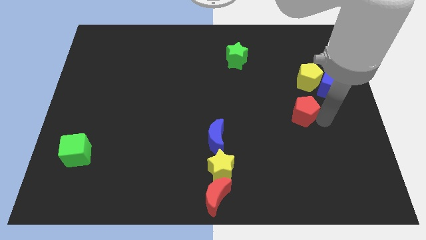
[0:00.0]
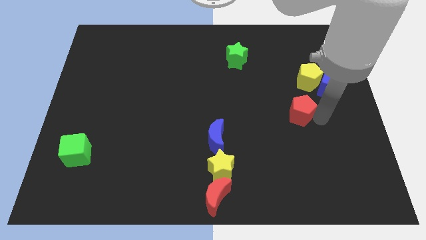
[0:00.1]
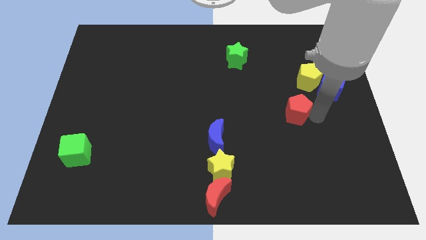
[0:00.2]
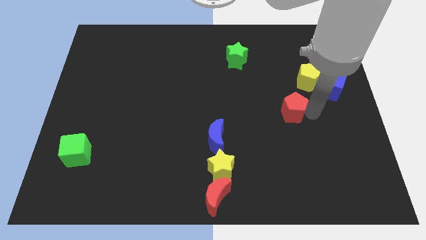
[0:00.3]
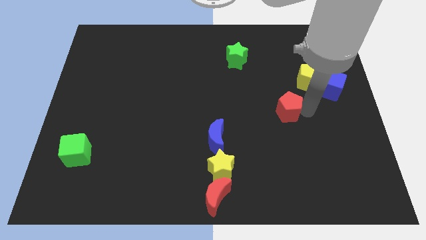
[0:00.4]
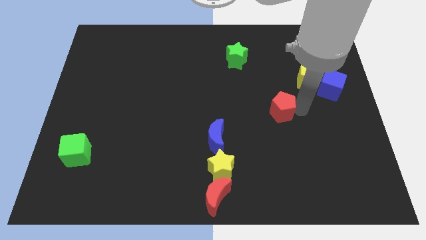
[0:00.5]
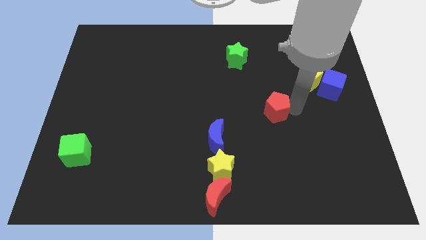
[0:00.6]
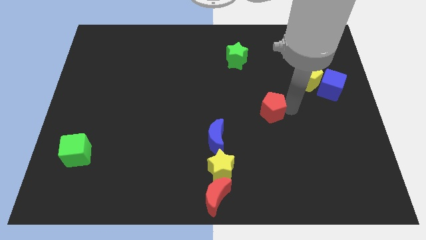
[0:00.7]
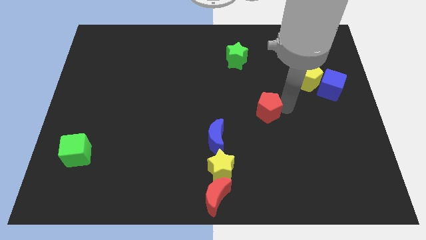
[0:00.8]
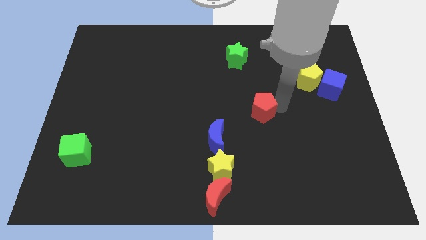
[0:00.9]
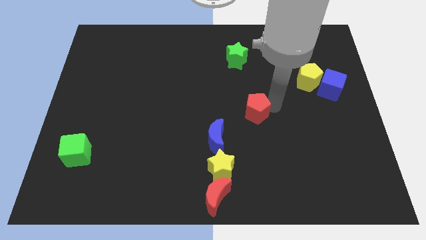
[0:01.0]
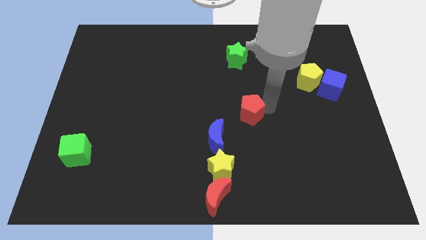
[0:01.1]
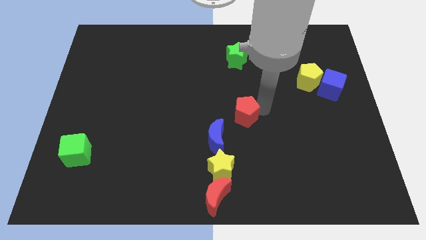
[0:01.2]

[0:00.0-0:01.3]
push the red pentagon to the left side of the board

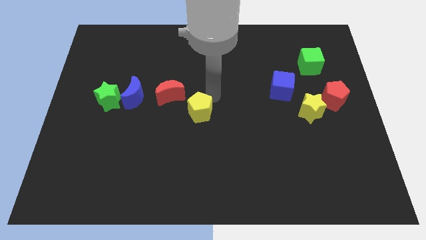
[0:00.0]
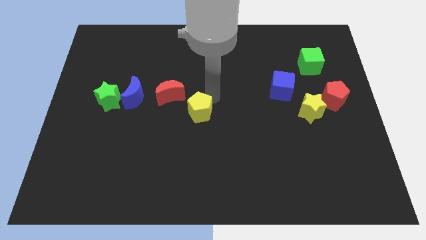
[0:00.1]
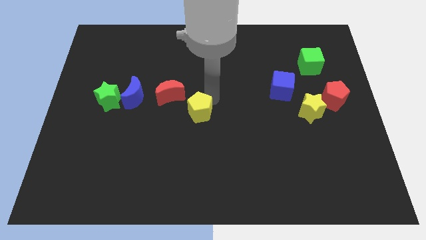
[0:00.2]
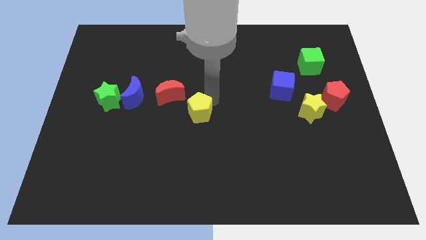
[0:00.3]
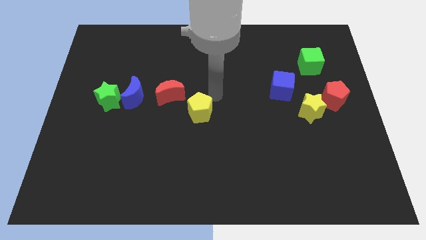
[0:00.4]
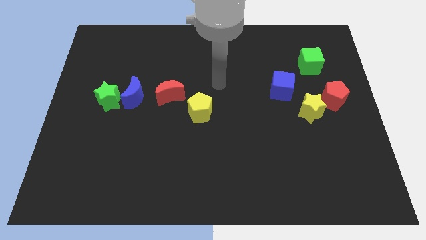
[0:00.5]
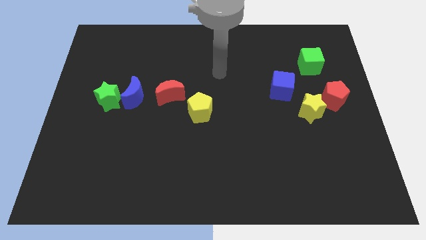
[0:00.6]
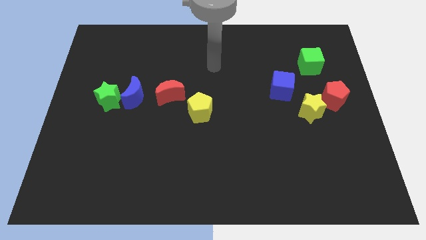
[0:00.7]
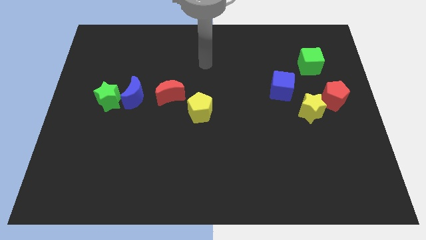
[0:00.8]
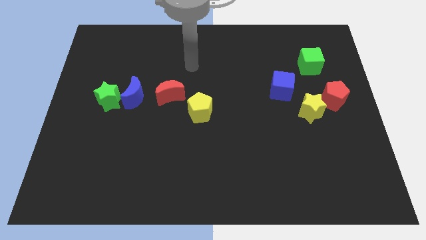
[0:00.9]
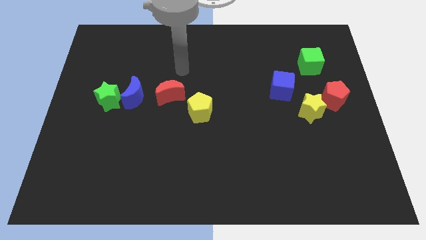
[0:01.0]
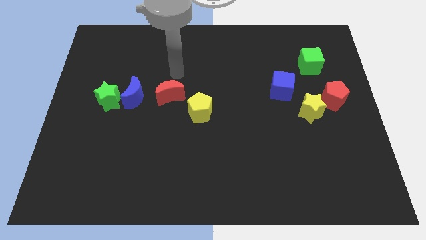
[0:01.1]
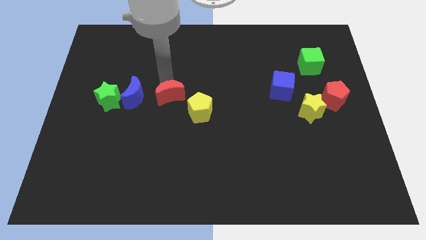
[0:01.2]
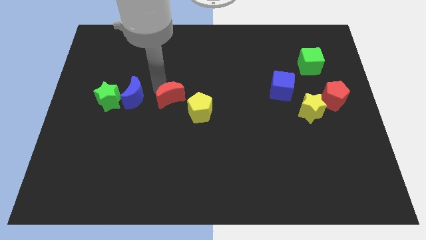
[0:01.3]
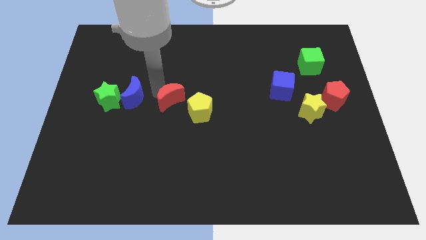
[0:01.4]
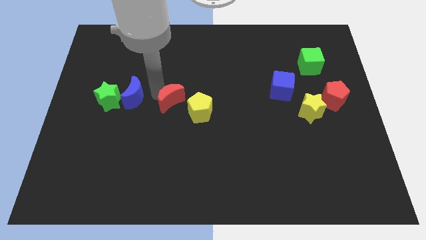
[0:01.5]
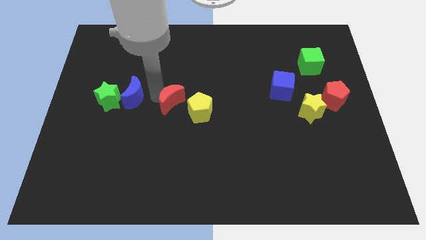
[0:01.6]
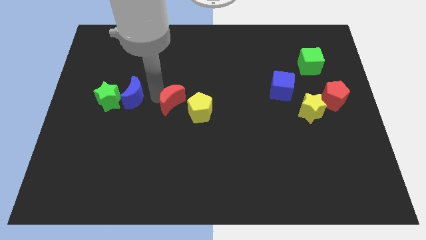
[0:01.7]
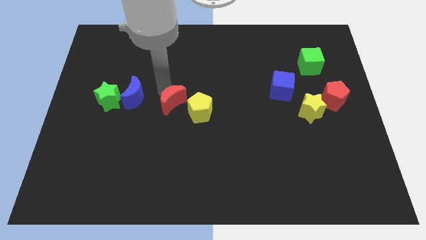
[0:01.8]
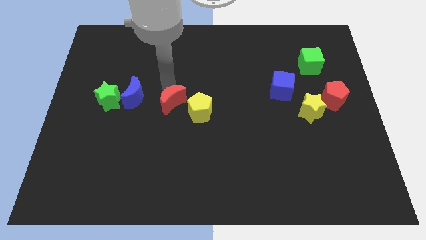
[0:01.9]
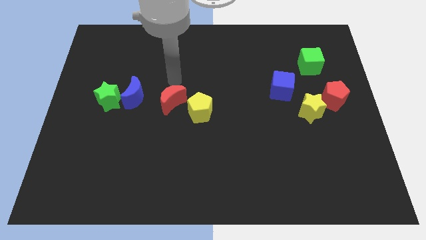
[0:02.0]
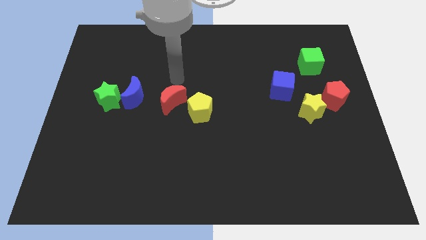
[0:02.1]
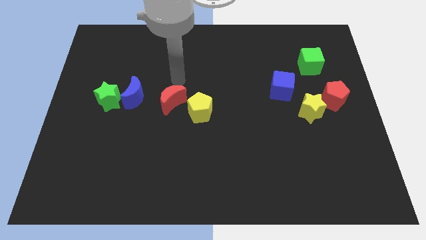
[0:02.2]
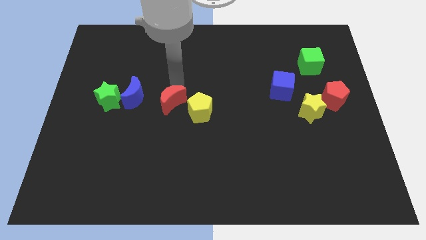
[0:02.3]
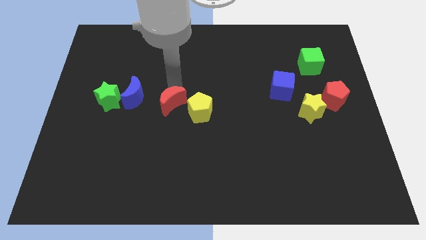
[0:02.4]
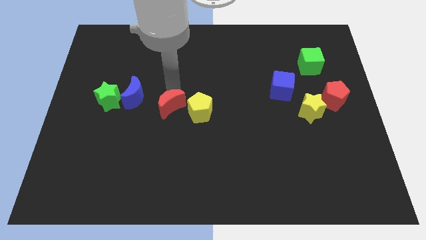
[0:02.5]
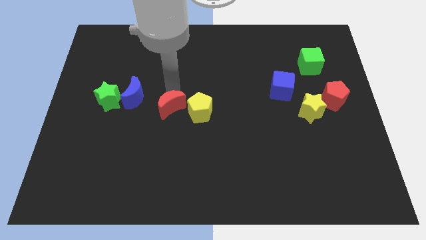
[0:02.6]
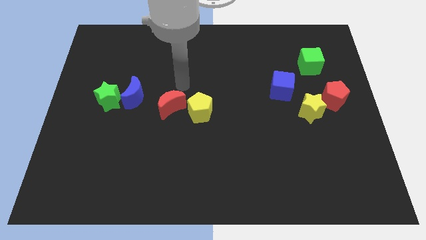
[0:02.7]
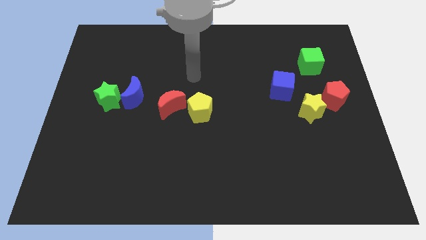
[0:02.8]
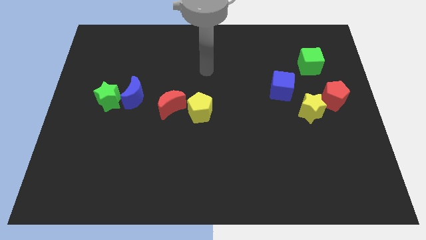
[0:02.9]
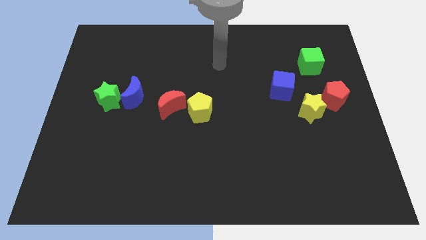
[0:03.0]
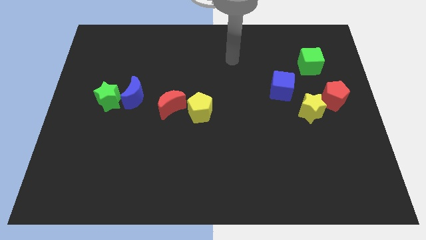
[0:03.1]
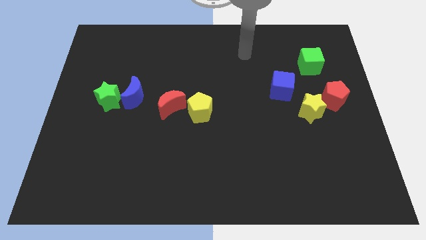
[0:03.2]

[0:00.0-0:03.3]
push the red crescent to the right of yellow pentagon

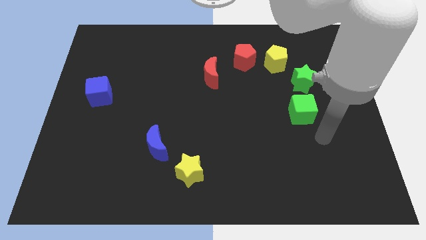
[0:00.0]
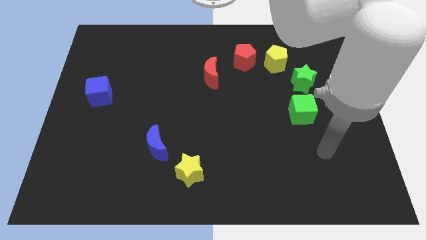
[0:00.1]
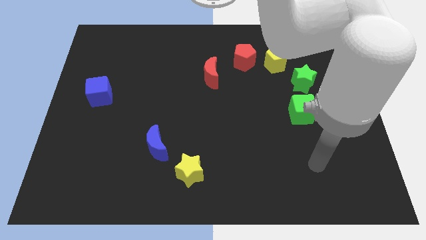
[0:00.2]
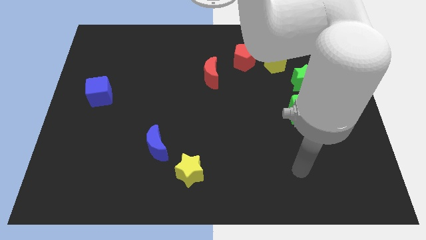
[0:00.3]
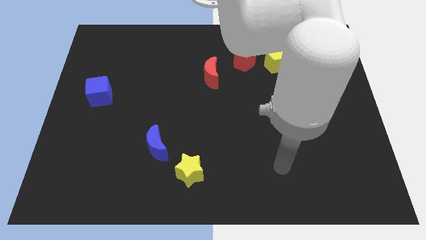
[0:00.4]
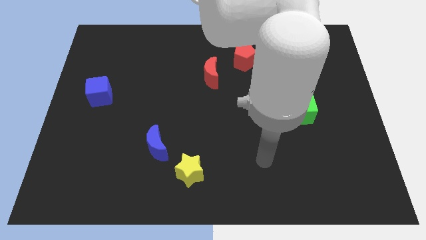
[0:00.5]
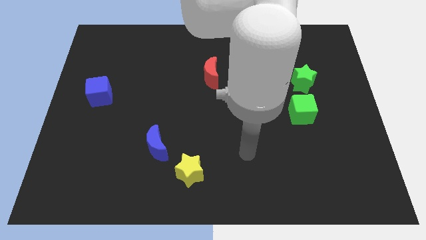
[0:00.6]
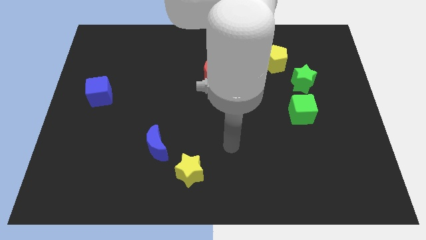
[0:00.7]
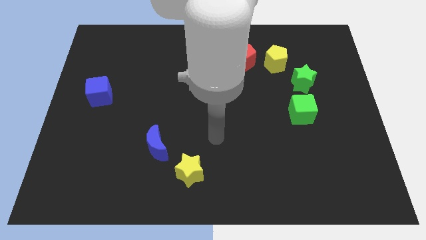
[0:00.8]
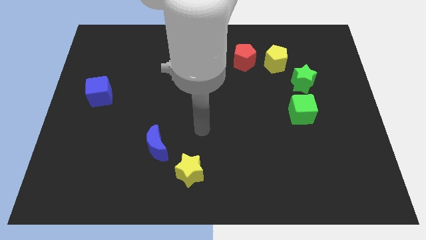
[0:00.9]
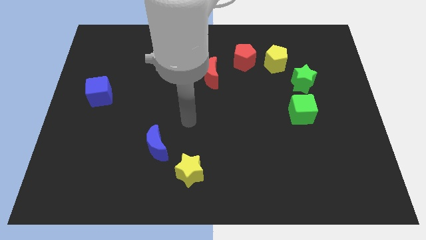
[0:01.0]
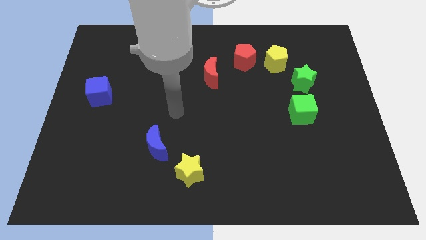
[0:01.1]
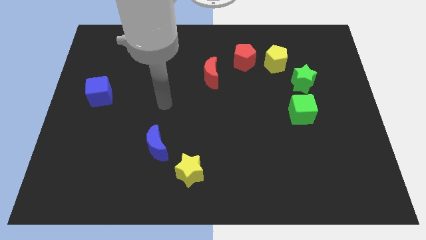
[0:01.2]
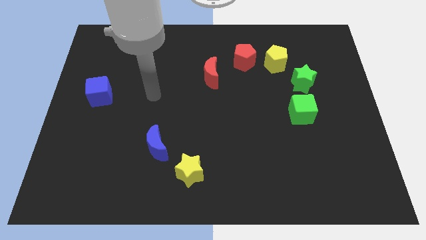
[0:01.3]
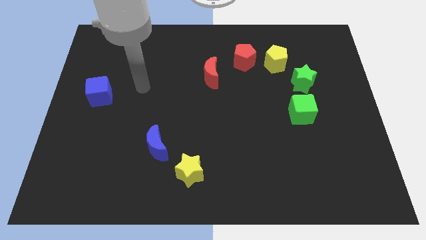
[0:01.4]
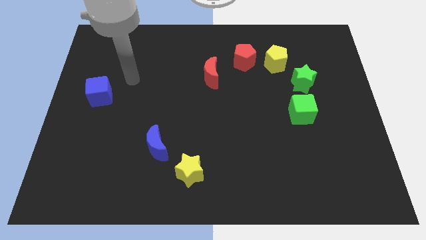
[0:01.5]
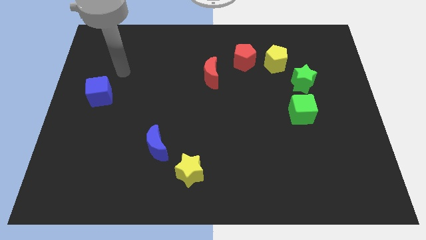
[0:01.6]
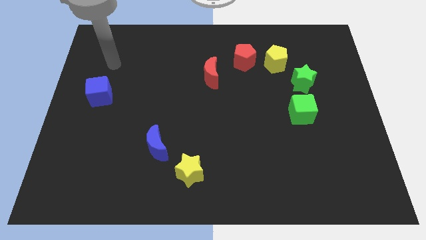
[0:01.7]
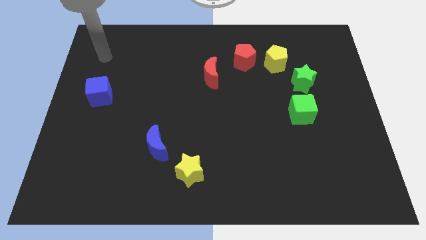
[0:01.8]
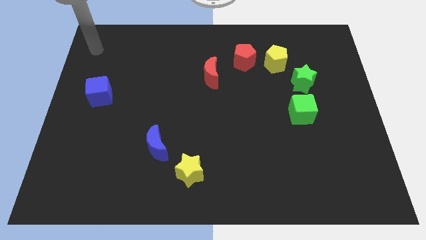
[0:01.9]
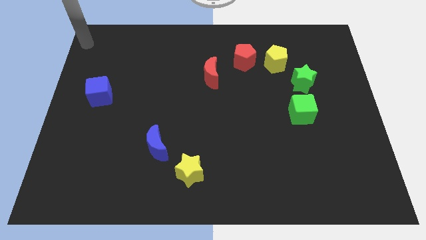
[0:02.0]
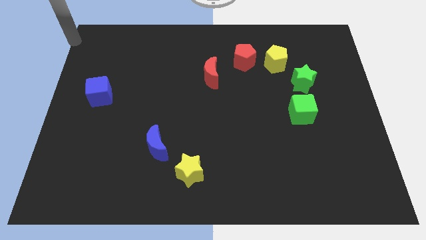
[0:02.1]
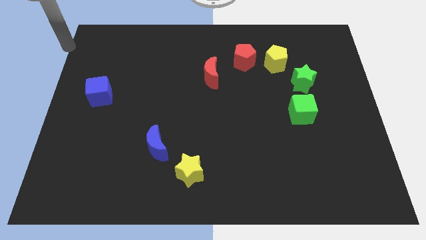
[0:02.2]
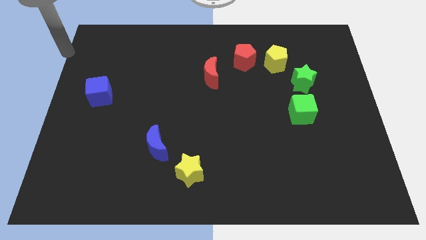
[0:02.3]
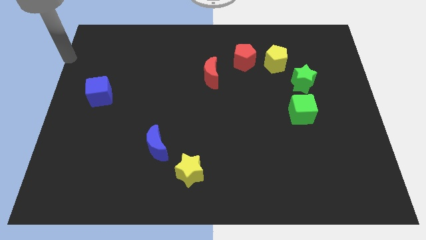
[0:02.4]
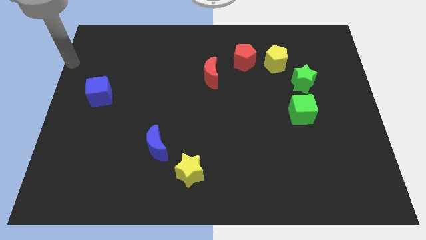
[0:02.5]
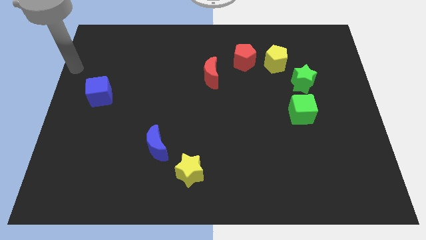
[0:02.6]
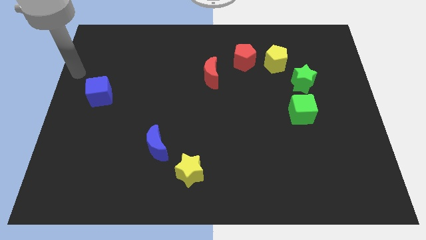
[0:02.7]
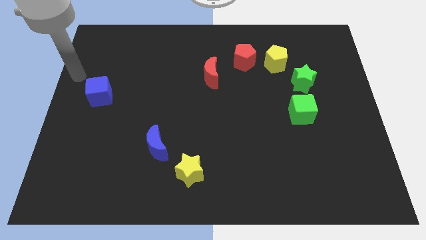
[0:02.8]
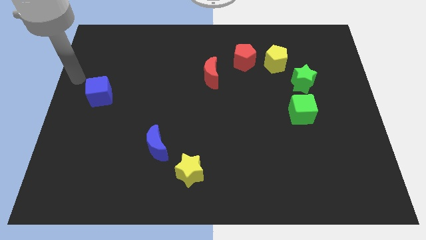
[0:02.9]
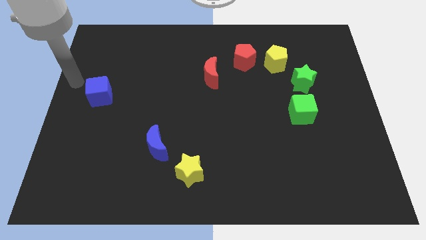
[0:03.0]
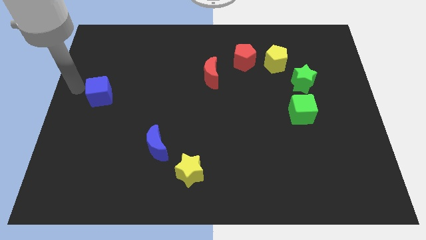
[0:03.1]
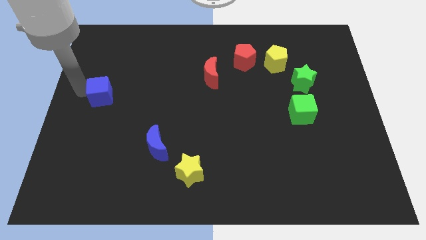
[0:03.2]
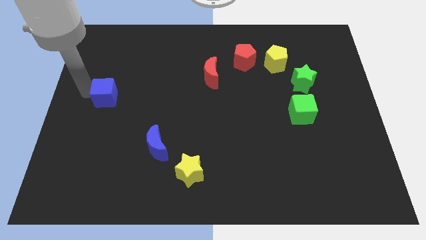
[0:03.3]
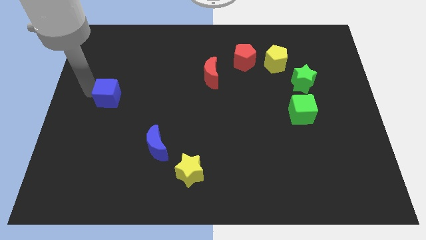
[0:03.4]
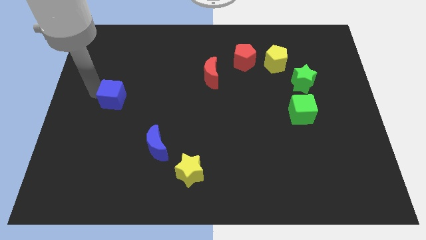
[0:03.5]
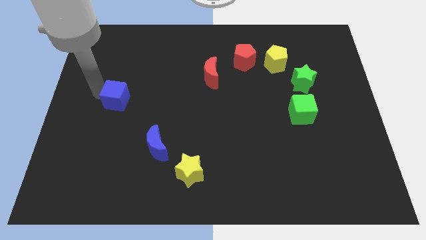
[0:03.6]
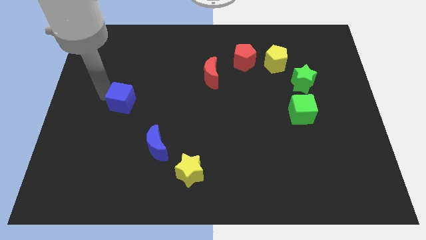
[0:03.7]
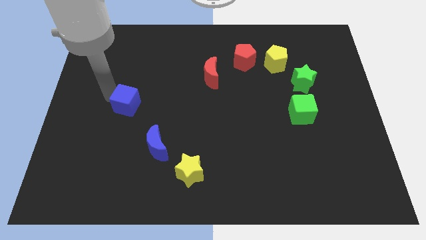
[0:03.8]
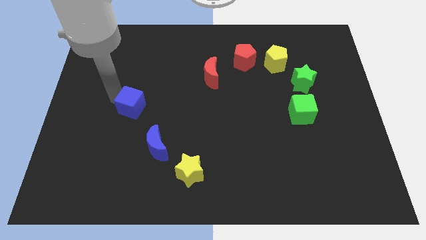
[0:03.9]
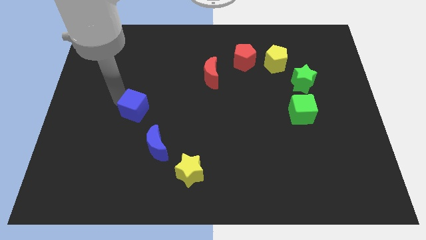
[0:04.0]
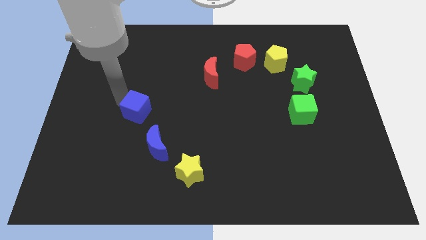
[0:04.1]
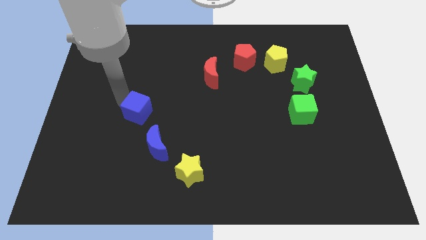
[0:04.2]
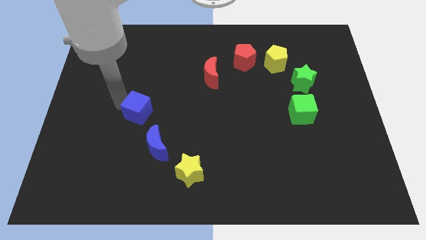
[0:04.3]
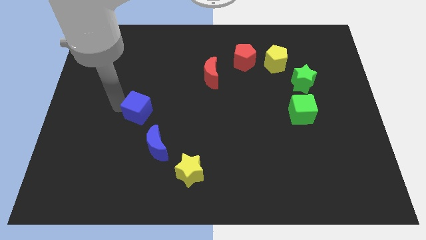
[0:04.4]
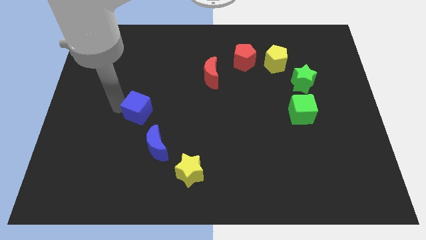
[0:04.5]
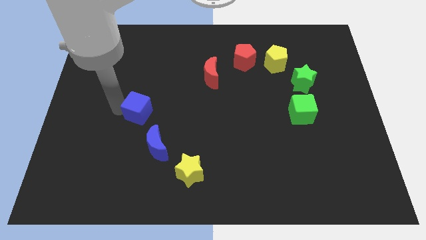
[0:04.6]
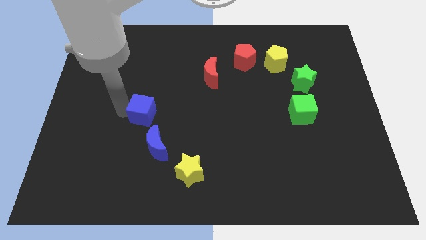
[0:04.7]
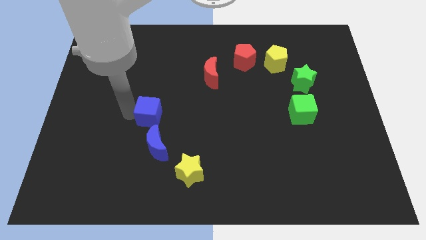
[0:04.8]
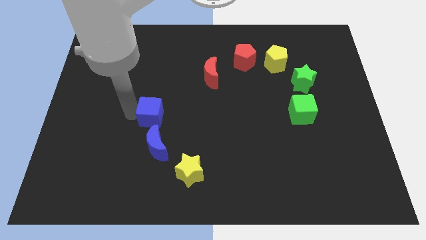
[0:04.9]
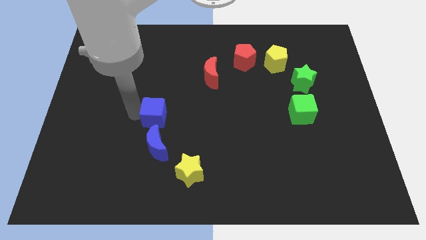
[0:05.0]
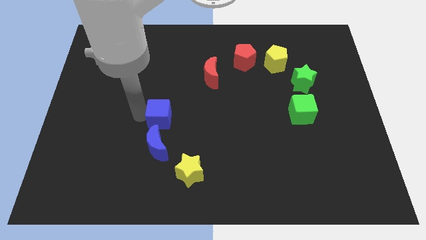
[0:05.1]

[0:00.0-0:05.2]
push the blue cube to the top of the blue crescent
